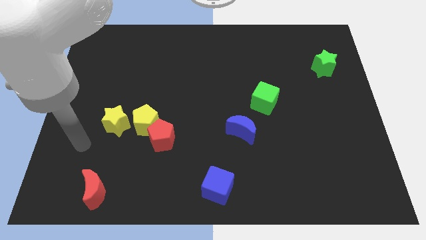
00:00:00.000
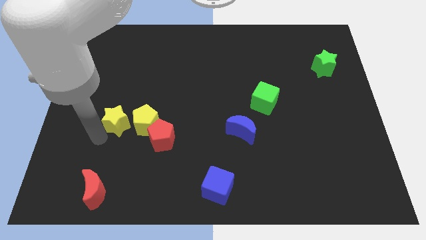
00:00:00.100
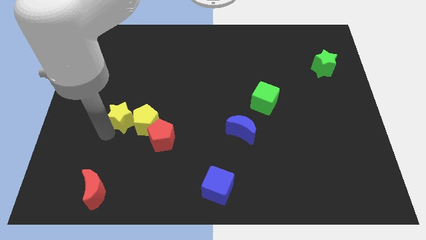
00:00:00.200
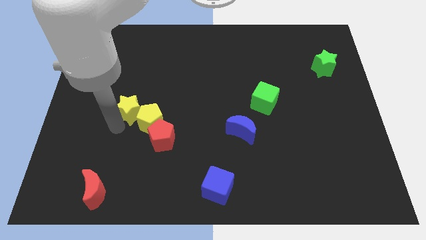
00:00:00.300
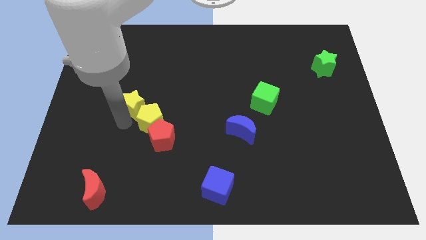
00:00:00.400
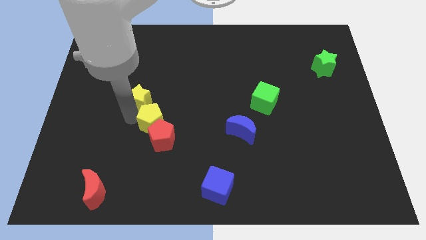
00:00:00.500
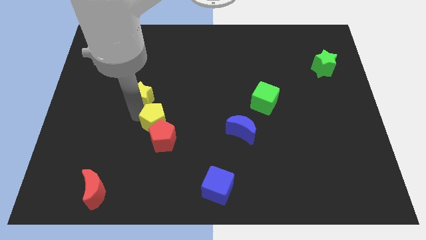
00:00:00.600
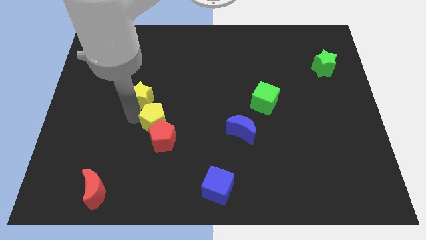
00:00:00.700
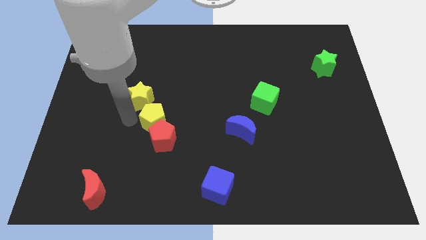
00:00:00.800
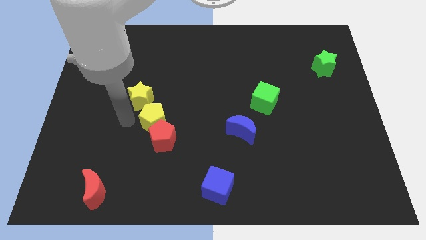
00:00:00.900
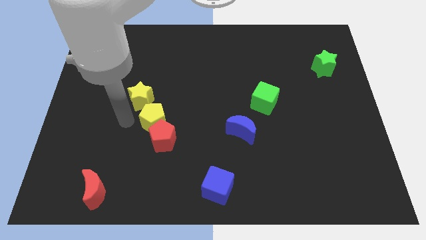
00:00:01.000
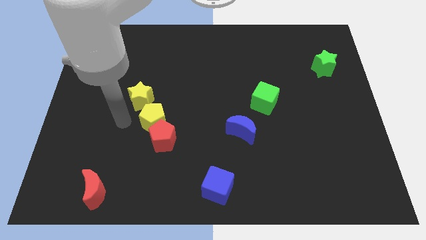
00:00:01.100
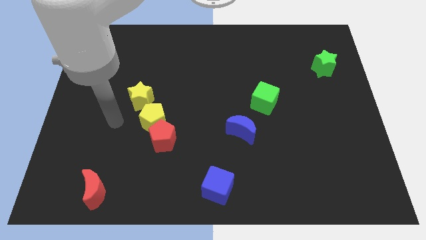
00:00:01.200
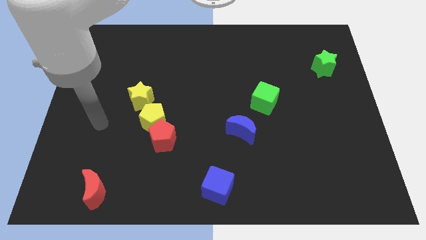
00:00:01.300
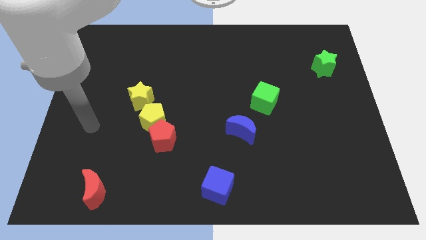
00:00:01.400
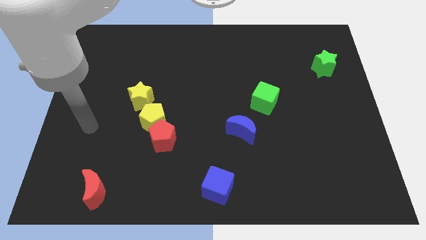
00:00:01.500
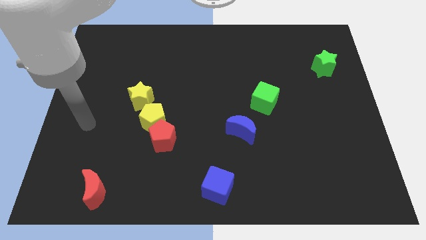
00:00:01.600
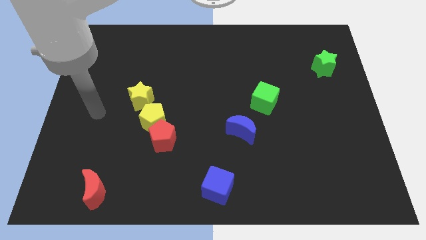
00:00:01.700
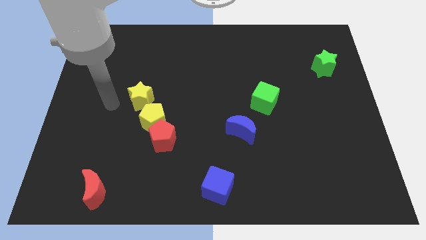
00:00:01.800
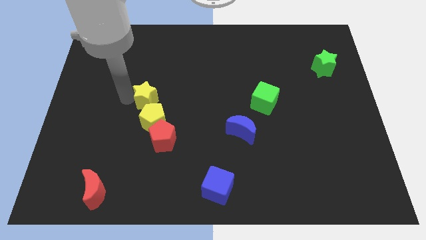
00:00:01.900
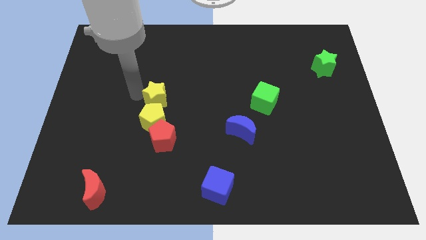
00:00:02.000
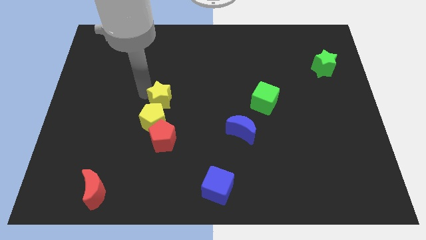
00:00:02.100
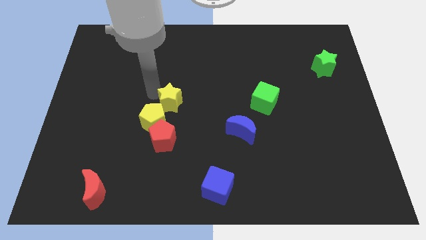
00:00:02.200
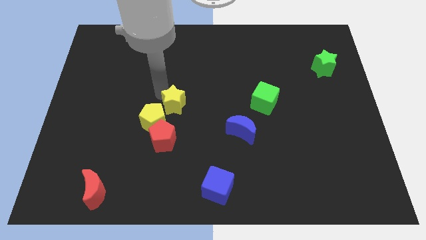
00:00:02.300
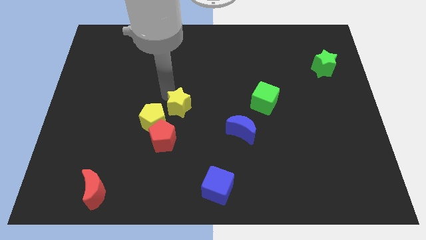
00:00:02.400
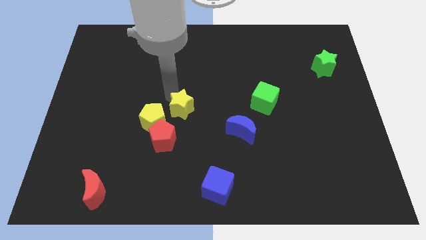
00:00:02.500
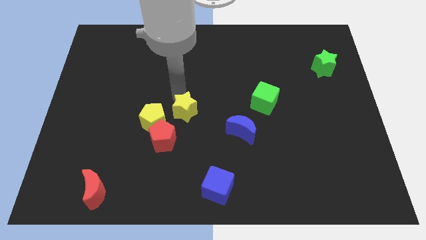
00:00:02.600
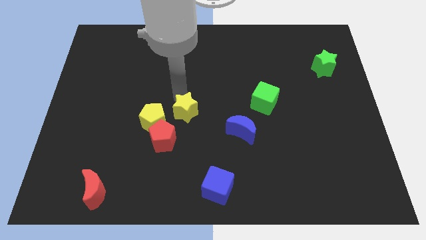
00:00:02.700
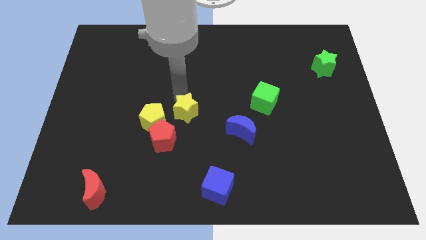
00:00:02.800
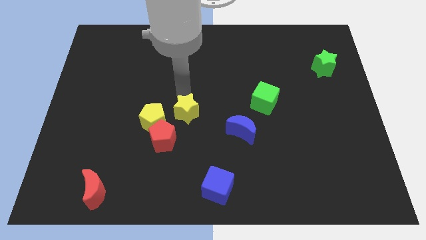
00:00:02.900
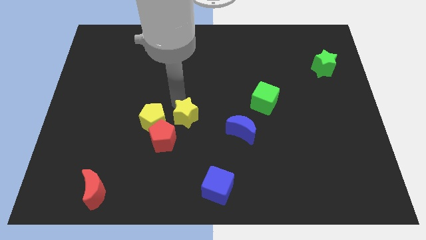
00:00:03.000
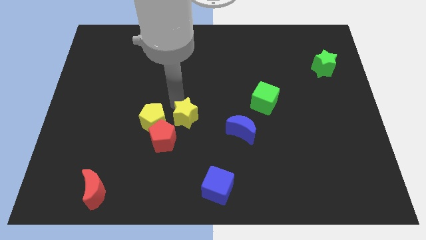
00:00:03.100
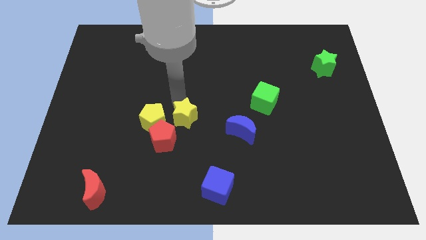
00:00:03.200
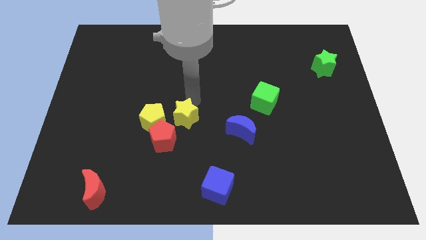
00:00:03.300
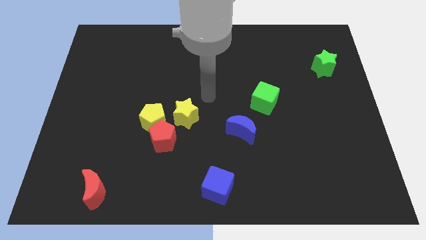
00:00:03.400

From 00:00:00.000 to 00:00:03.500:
slide the yellow star to the right of the yellow pentagon

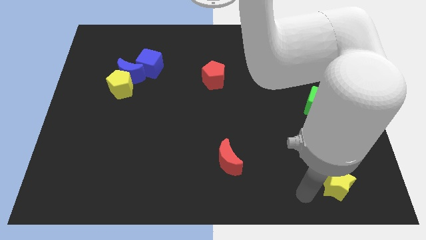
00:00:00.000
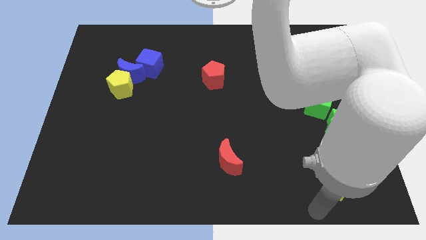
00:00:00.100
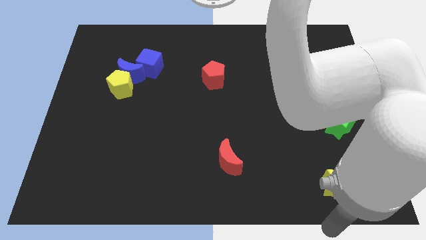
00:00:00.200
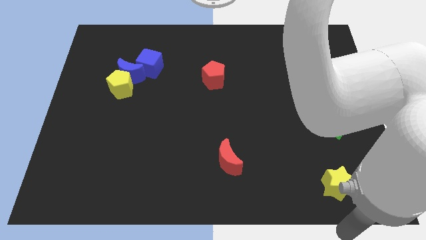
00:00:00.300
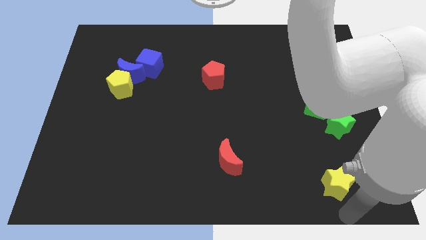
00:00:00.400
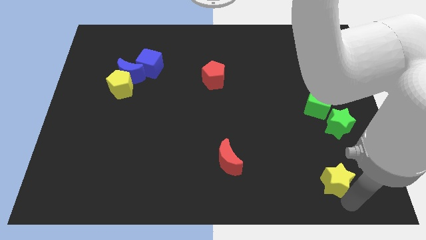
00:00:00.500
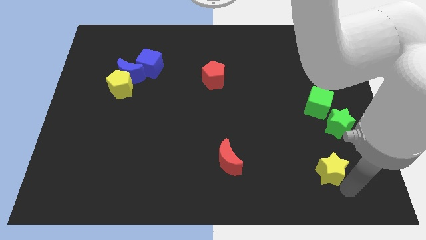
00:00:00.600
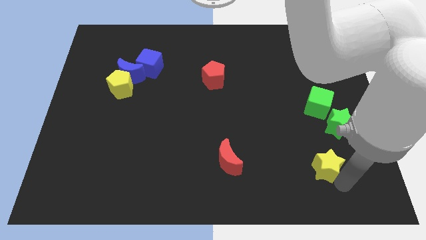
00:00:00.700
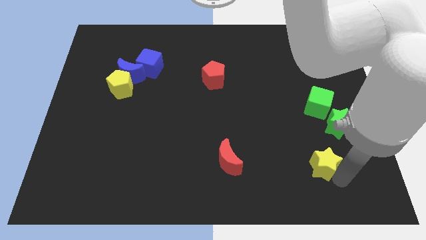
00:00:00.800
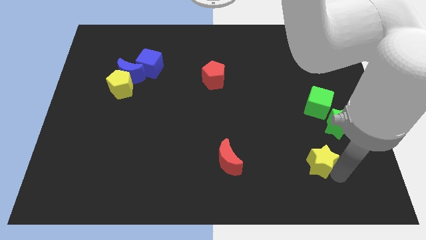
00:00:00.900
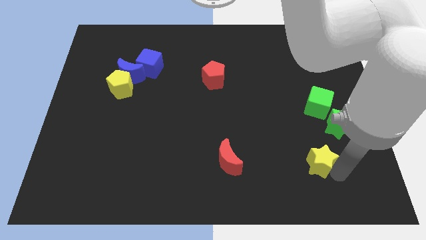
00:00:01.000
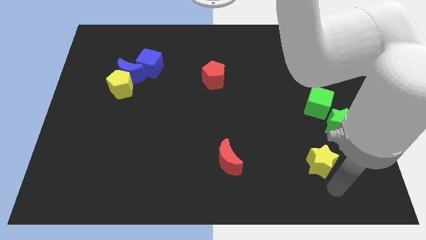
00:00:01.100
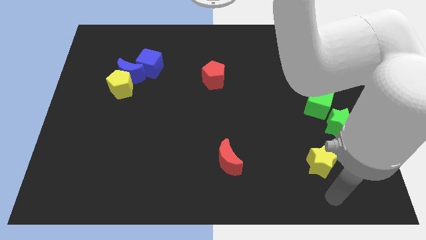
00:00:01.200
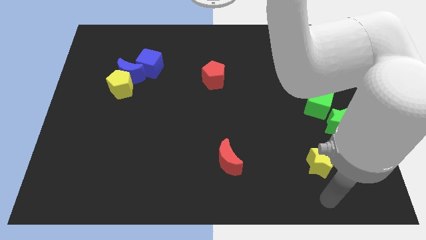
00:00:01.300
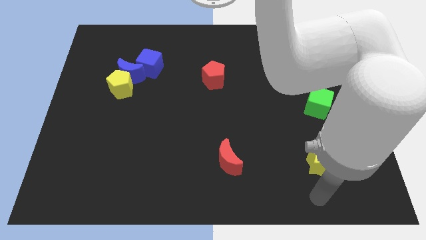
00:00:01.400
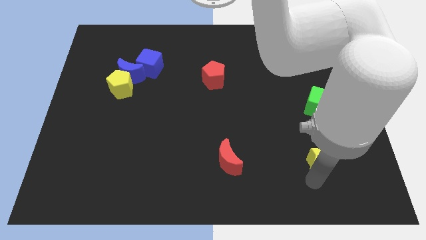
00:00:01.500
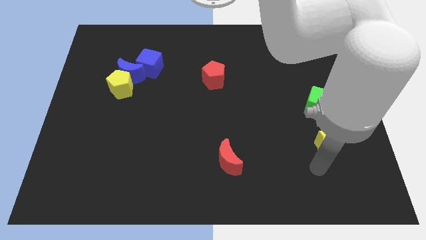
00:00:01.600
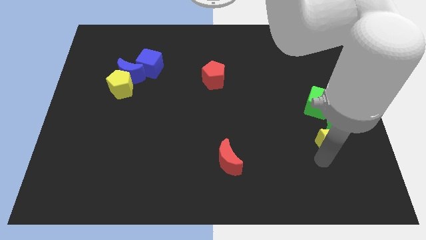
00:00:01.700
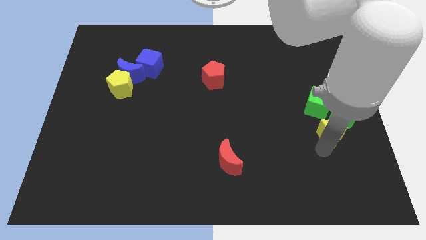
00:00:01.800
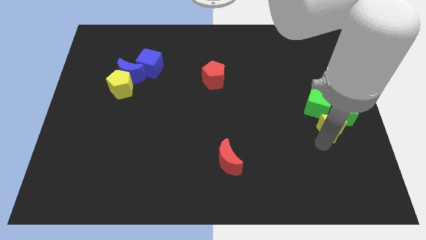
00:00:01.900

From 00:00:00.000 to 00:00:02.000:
place the yellow star into the green cube from the bottom

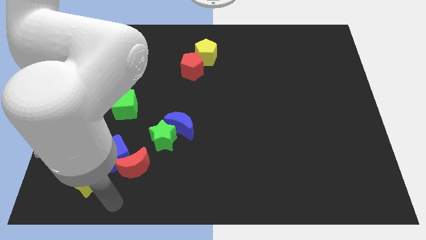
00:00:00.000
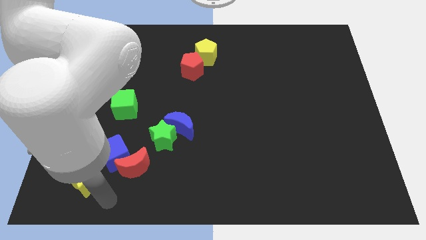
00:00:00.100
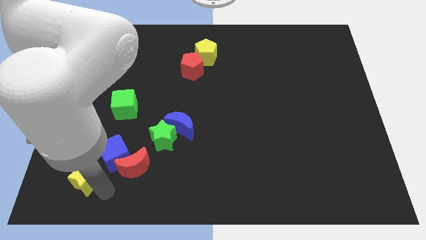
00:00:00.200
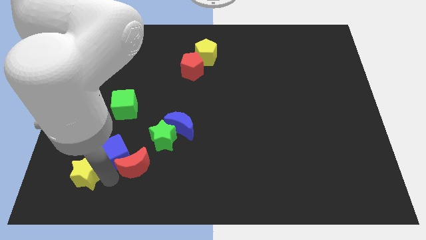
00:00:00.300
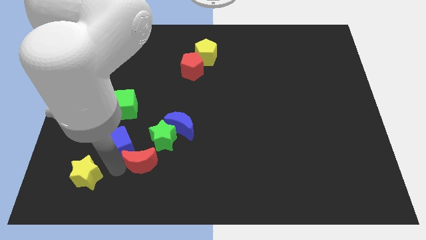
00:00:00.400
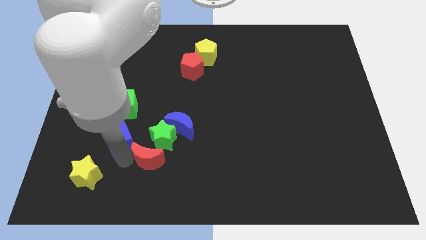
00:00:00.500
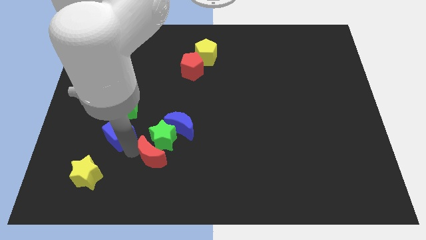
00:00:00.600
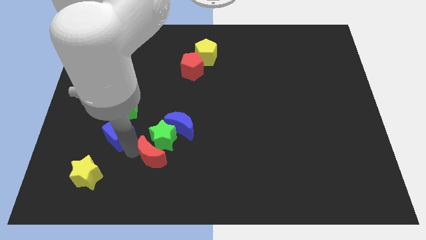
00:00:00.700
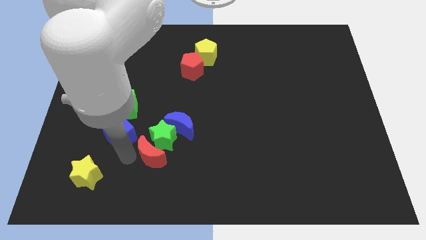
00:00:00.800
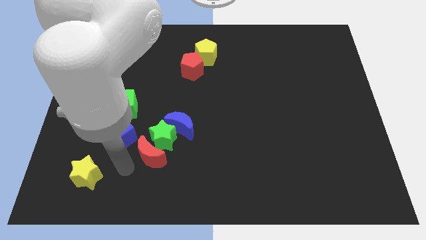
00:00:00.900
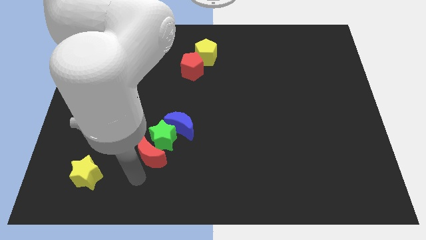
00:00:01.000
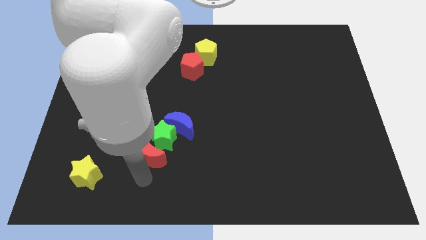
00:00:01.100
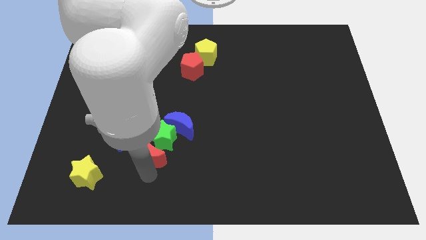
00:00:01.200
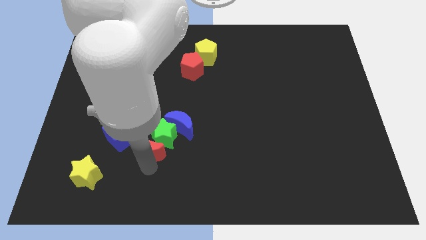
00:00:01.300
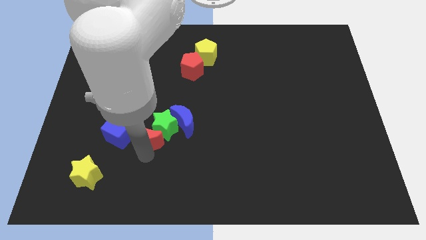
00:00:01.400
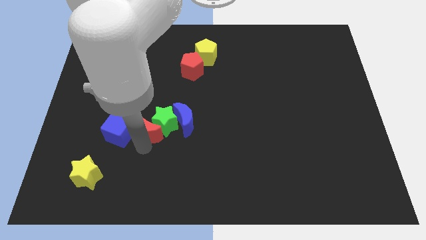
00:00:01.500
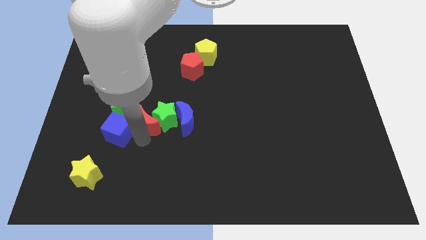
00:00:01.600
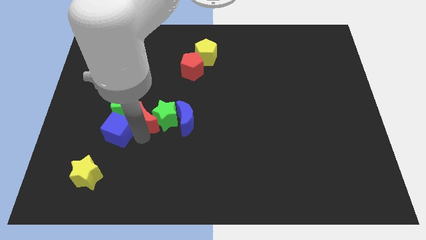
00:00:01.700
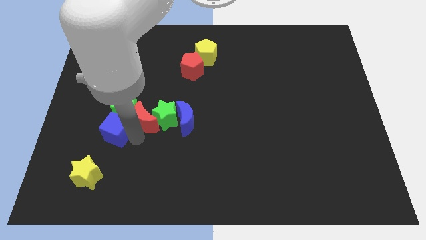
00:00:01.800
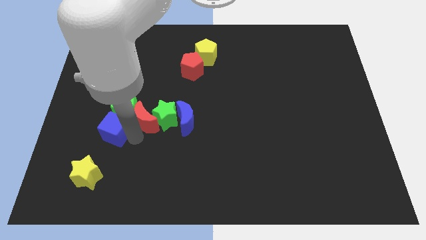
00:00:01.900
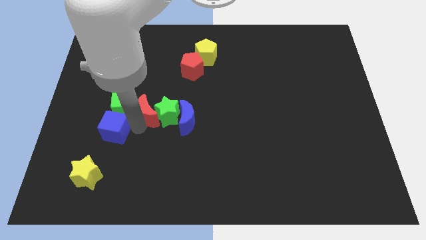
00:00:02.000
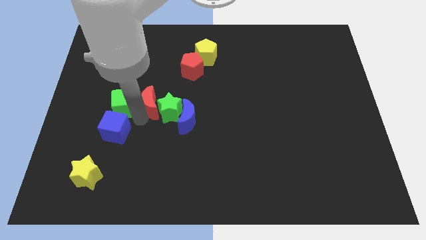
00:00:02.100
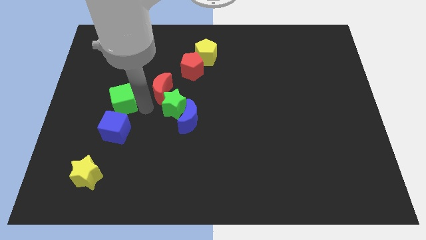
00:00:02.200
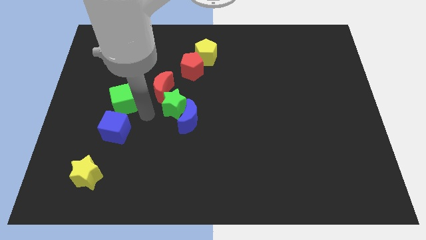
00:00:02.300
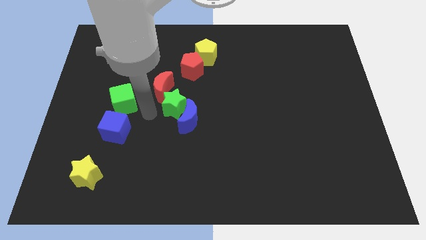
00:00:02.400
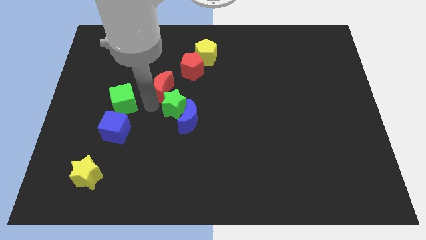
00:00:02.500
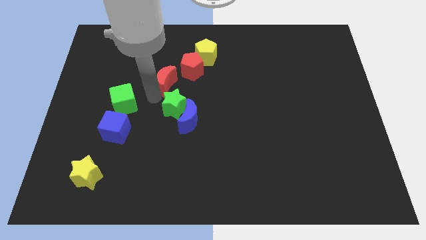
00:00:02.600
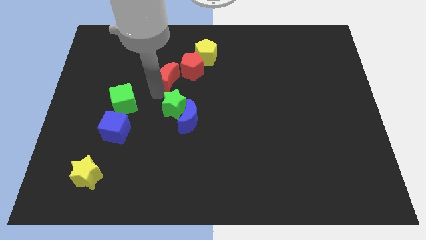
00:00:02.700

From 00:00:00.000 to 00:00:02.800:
push the red crescent to the top left of the green star

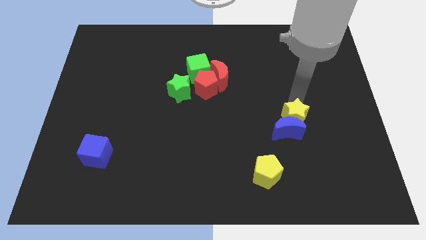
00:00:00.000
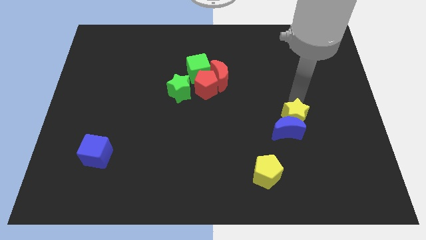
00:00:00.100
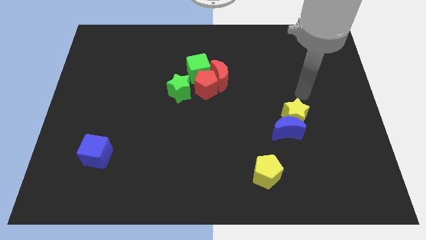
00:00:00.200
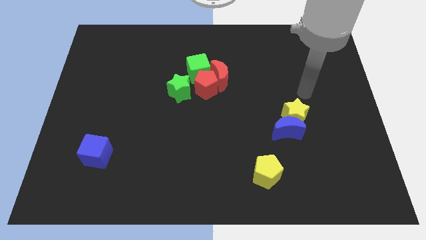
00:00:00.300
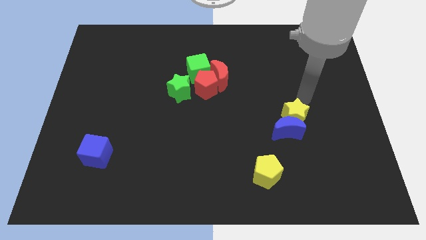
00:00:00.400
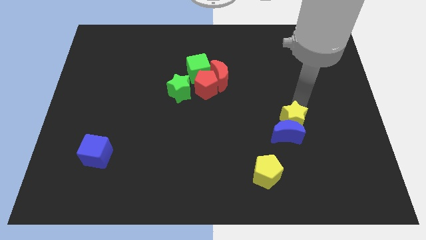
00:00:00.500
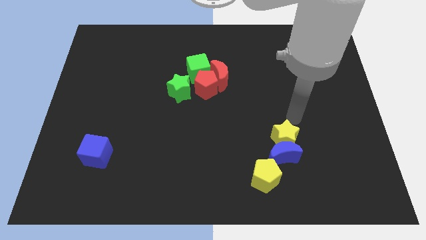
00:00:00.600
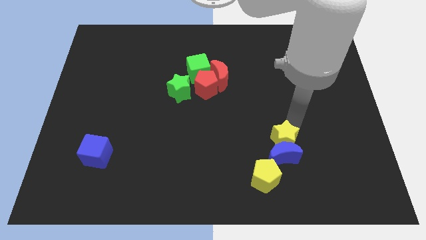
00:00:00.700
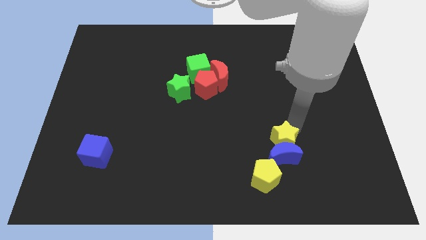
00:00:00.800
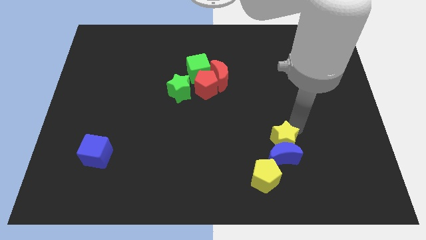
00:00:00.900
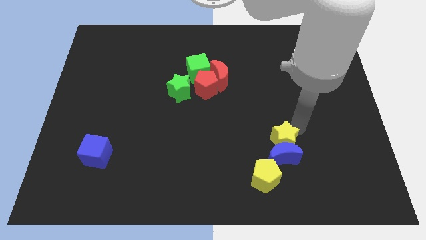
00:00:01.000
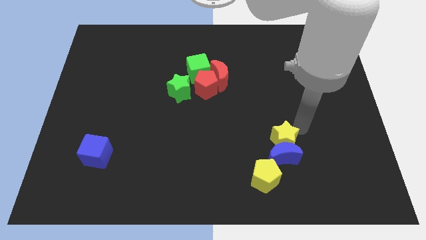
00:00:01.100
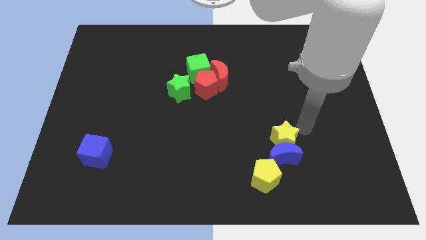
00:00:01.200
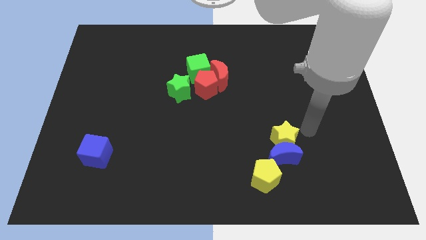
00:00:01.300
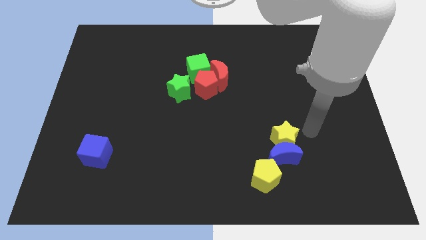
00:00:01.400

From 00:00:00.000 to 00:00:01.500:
move the blue moon and the yellow star towards the yellow pentagon
